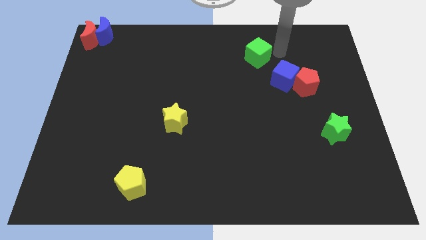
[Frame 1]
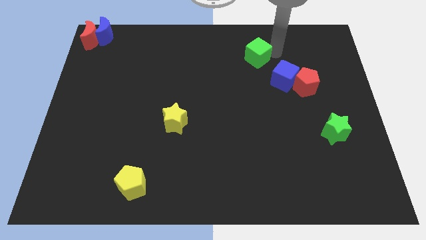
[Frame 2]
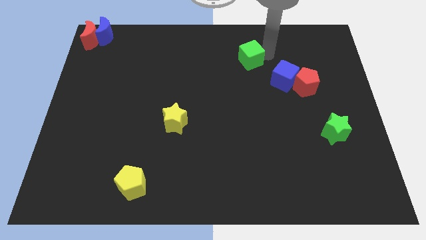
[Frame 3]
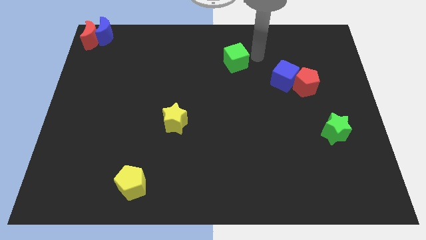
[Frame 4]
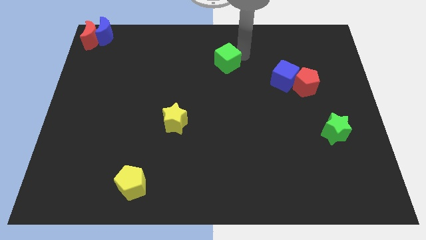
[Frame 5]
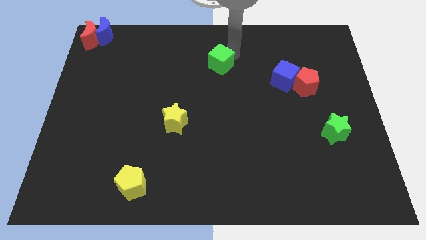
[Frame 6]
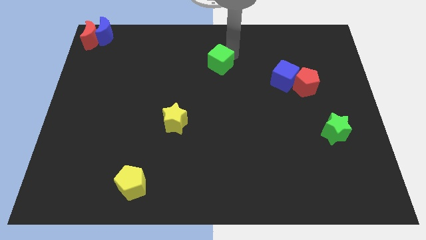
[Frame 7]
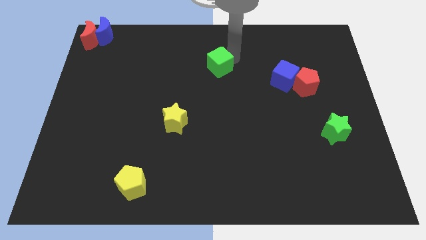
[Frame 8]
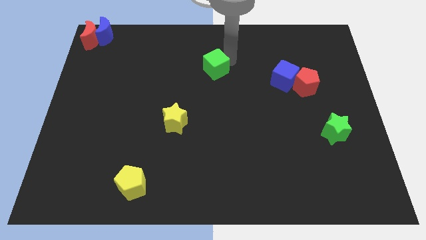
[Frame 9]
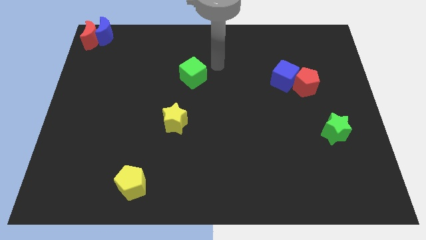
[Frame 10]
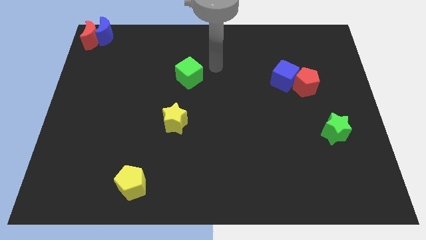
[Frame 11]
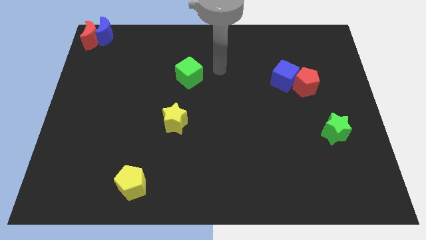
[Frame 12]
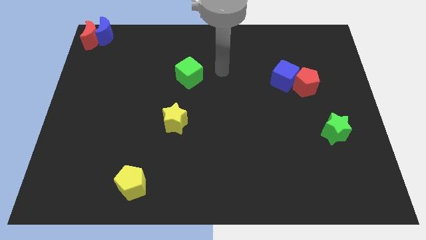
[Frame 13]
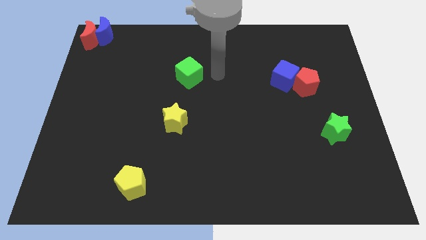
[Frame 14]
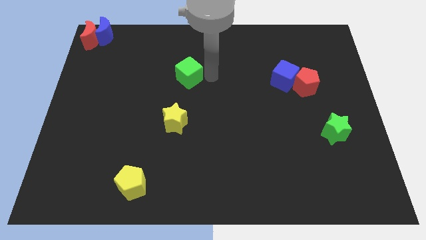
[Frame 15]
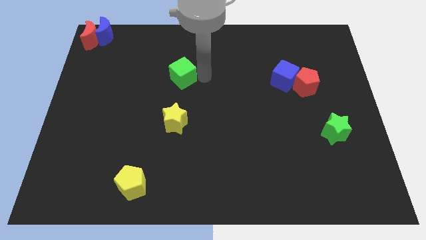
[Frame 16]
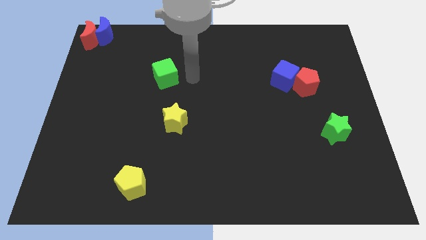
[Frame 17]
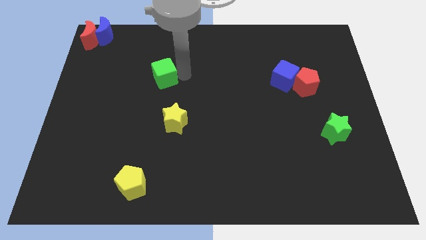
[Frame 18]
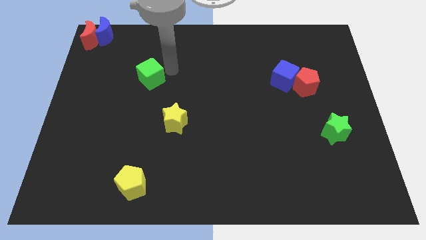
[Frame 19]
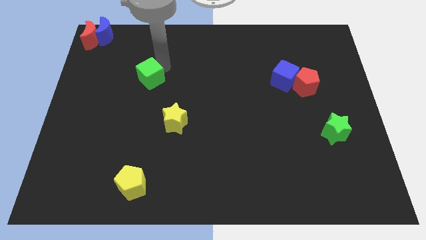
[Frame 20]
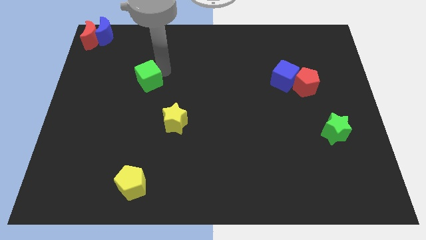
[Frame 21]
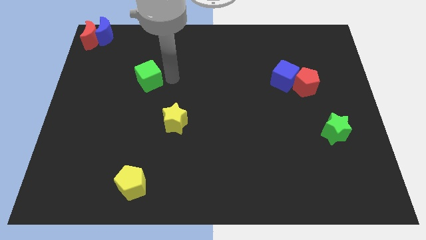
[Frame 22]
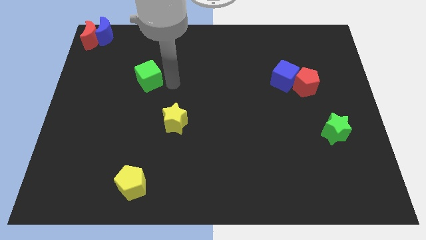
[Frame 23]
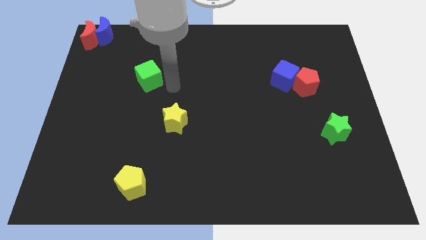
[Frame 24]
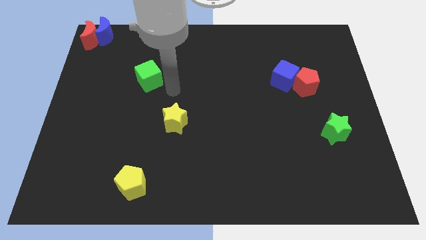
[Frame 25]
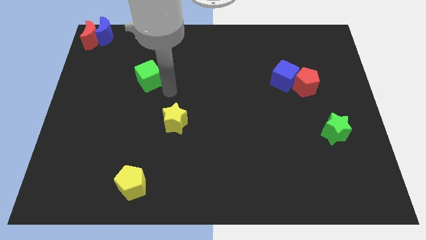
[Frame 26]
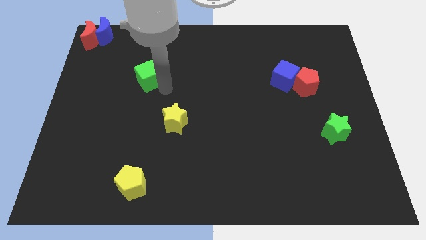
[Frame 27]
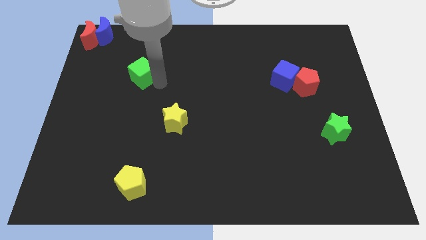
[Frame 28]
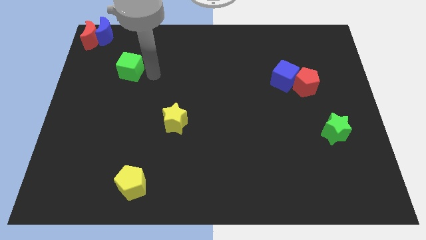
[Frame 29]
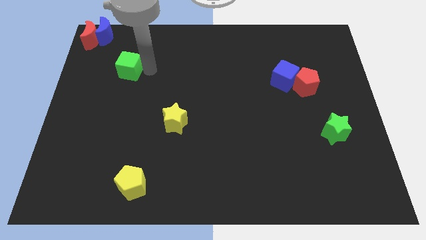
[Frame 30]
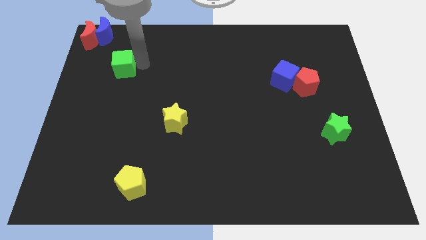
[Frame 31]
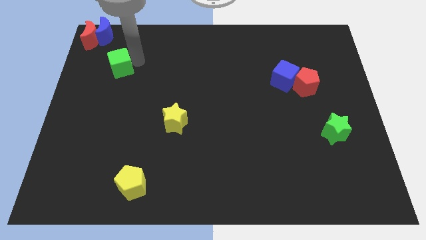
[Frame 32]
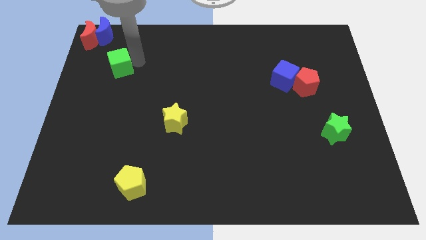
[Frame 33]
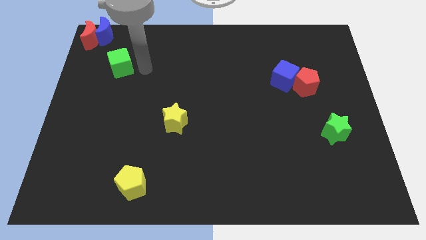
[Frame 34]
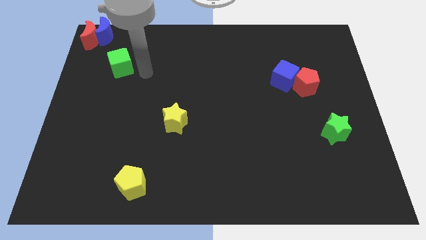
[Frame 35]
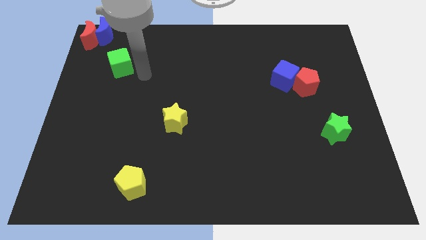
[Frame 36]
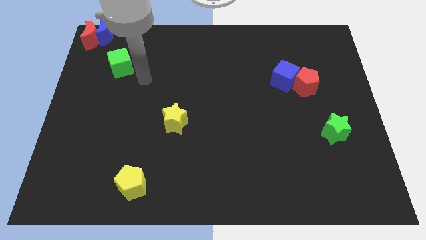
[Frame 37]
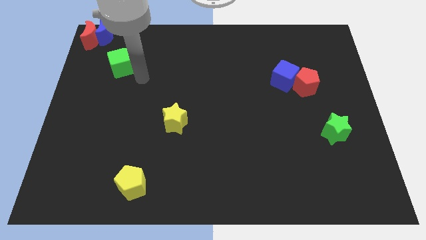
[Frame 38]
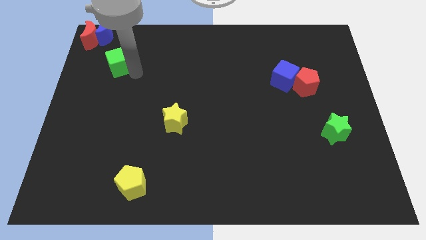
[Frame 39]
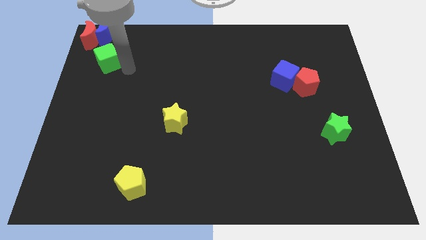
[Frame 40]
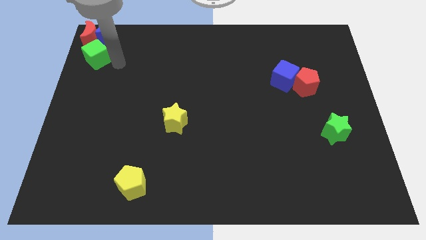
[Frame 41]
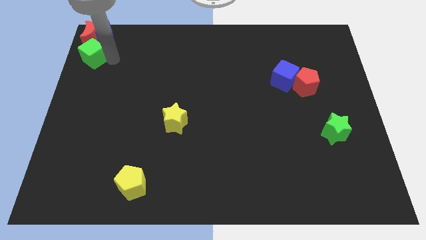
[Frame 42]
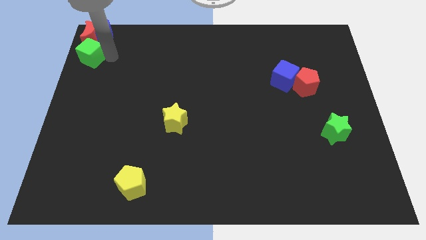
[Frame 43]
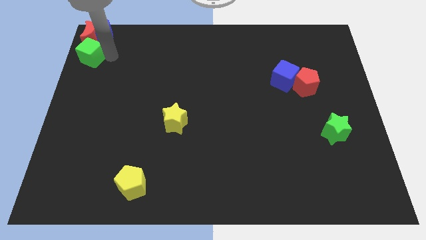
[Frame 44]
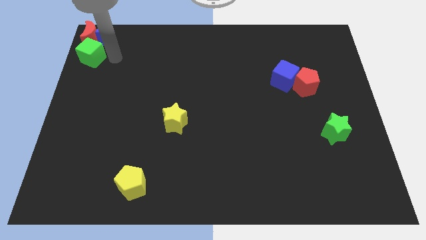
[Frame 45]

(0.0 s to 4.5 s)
move the green cube close to the red moon and blue crescent

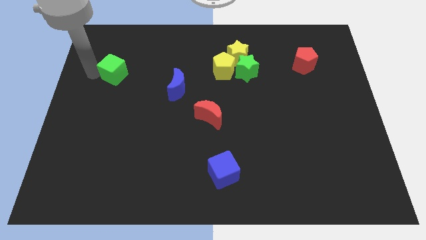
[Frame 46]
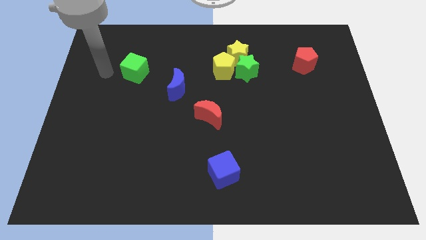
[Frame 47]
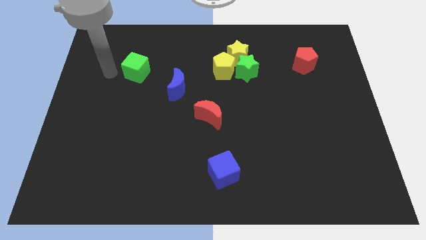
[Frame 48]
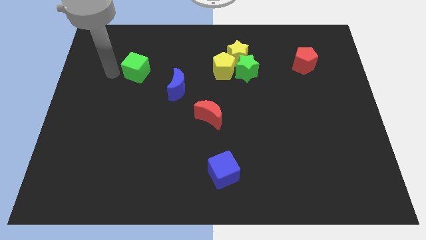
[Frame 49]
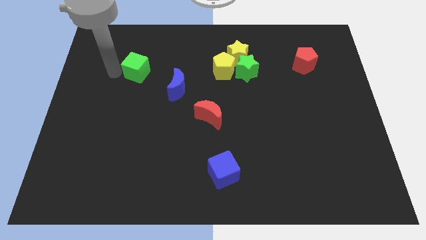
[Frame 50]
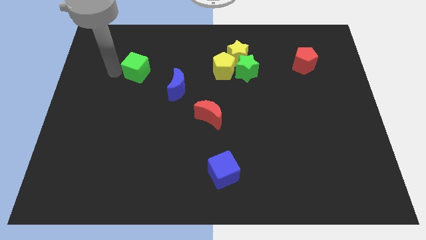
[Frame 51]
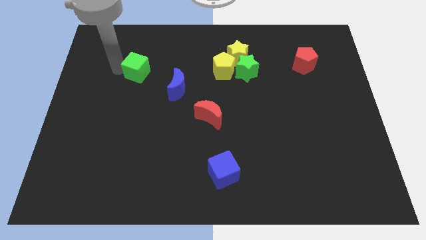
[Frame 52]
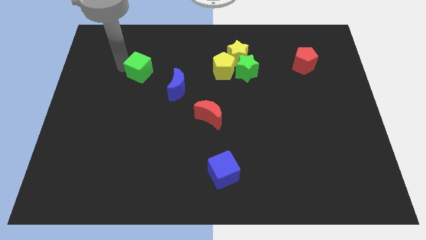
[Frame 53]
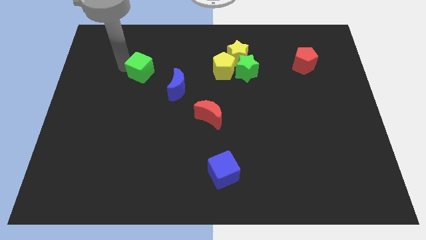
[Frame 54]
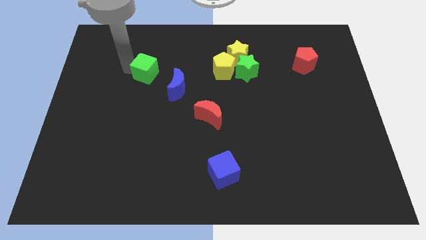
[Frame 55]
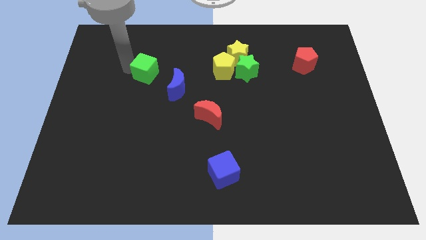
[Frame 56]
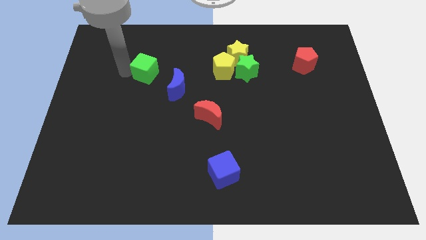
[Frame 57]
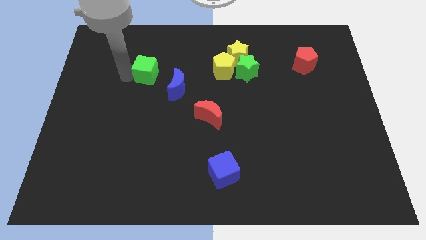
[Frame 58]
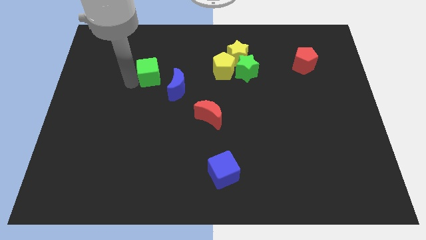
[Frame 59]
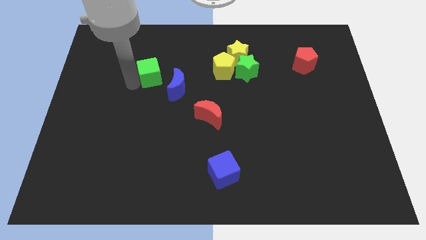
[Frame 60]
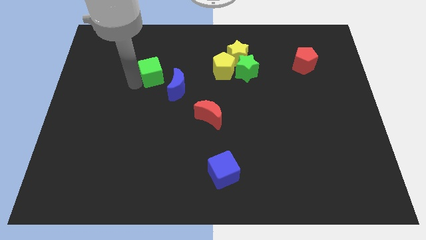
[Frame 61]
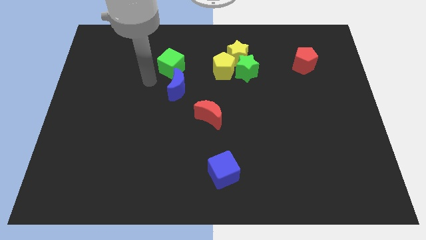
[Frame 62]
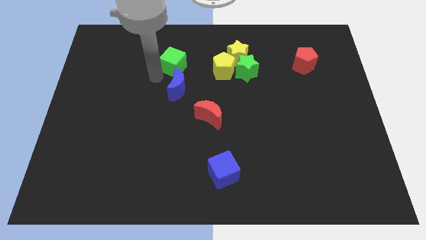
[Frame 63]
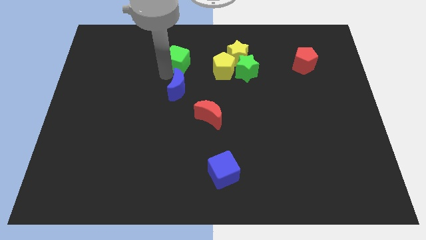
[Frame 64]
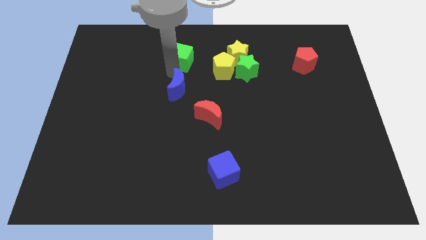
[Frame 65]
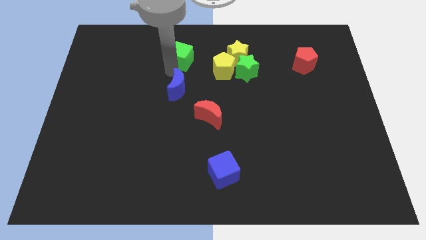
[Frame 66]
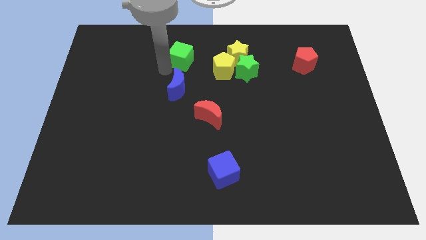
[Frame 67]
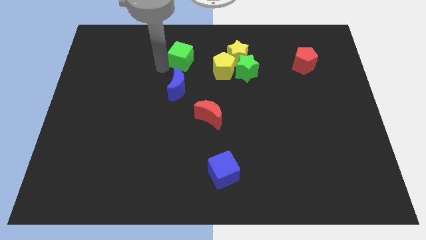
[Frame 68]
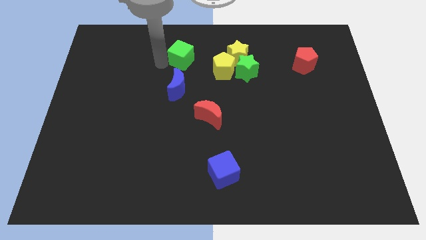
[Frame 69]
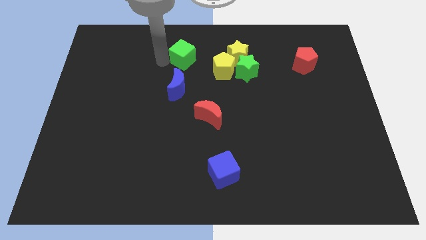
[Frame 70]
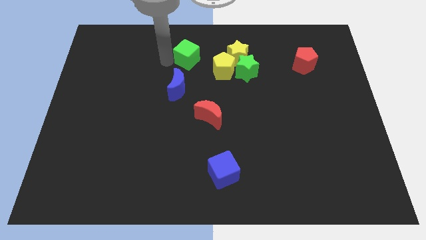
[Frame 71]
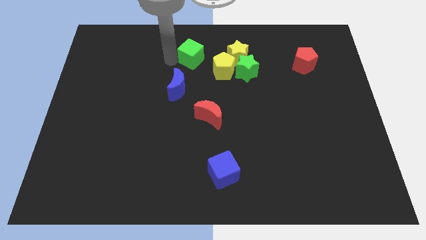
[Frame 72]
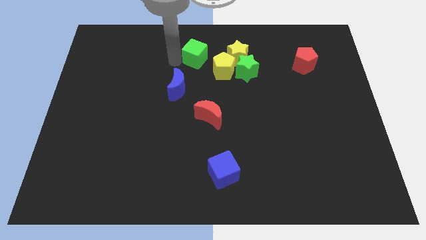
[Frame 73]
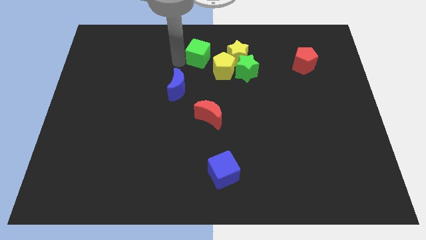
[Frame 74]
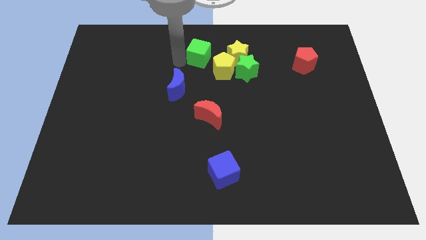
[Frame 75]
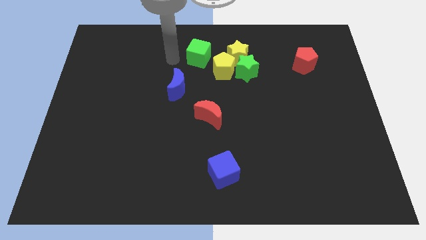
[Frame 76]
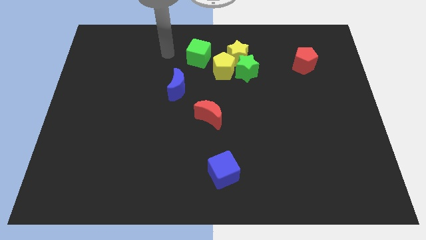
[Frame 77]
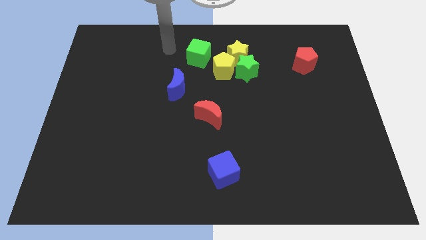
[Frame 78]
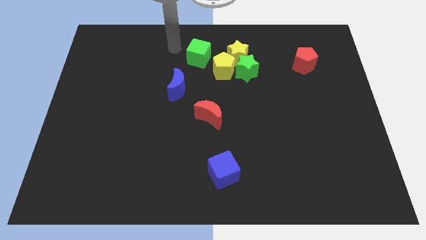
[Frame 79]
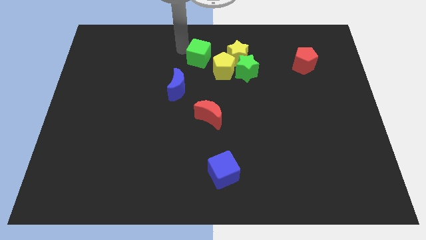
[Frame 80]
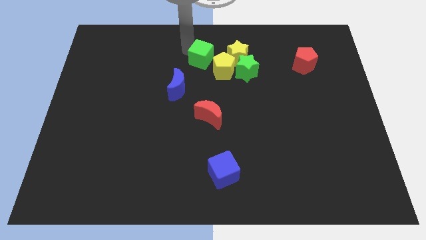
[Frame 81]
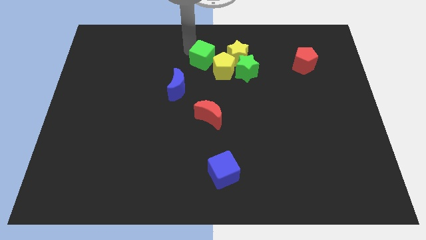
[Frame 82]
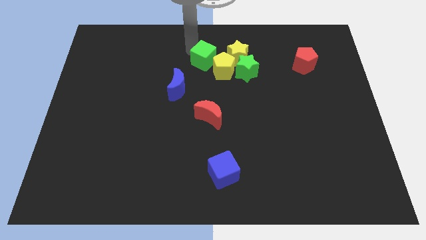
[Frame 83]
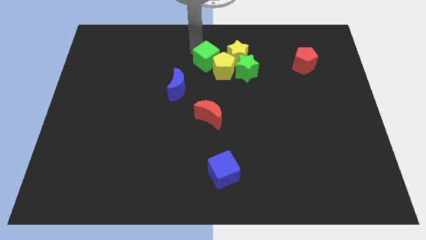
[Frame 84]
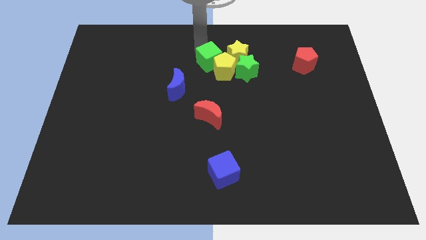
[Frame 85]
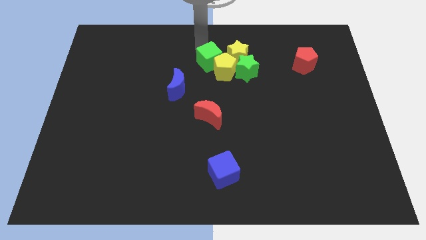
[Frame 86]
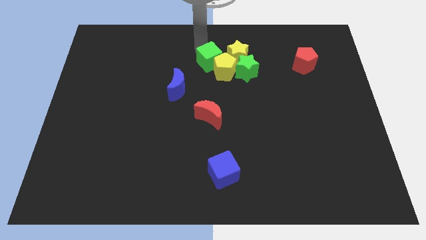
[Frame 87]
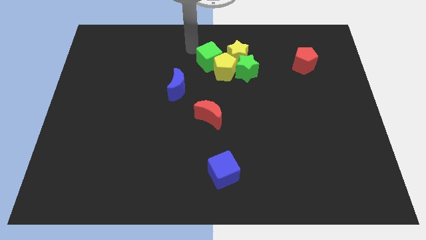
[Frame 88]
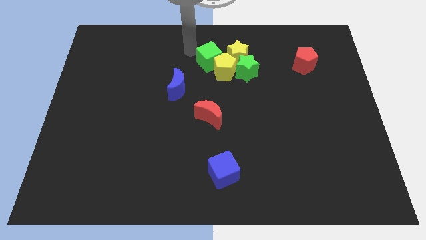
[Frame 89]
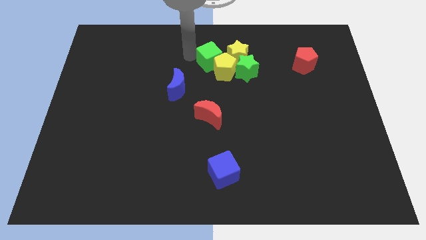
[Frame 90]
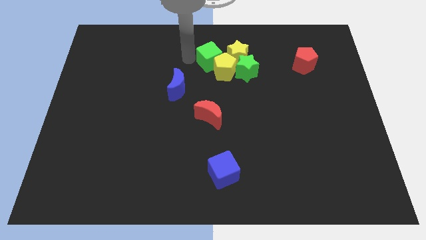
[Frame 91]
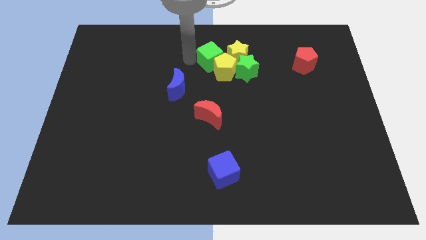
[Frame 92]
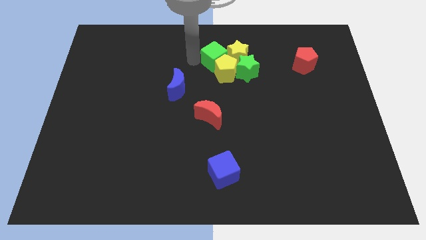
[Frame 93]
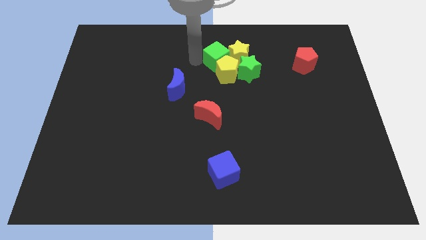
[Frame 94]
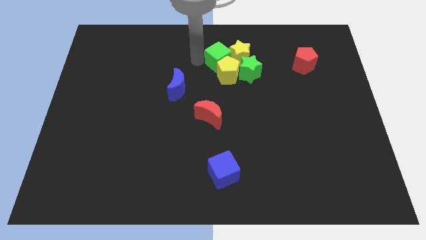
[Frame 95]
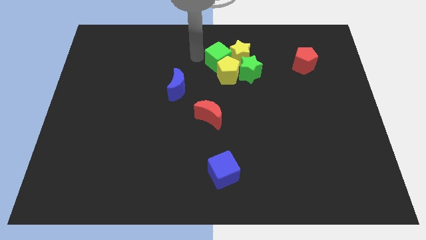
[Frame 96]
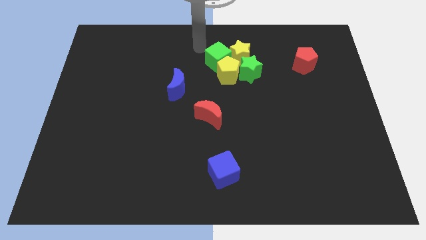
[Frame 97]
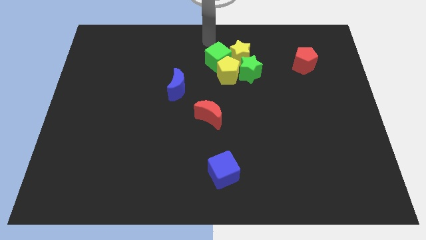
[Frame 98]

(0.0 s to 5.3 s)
push the green cube into the yellow star and yellow pentagon
